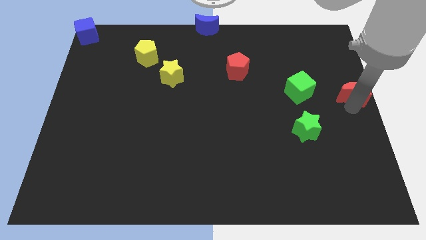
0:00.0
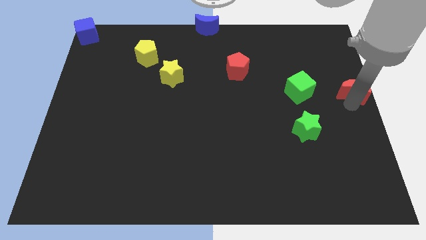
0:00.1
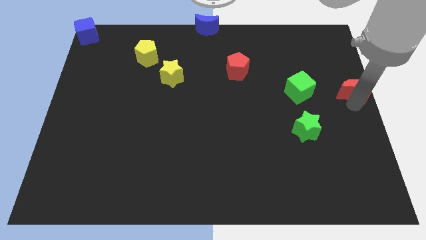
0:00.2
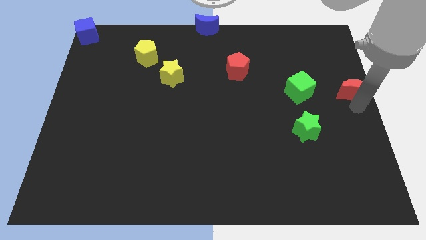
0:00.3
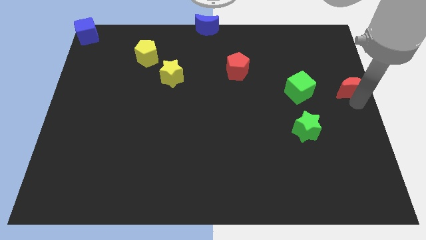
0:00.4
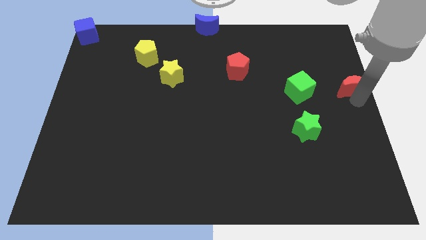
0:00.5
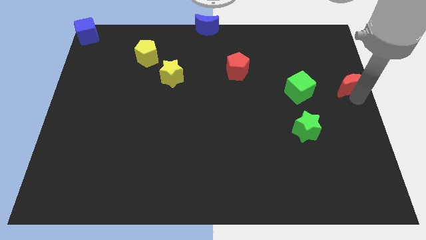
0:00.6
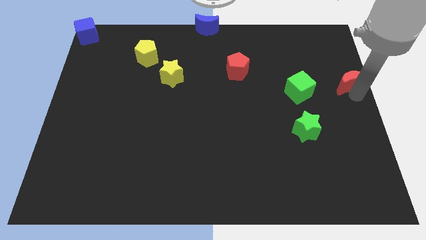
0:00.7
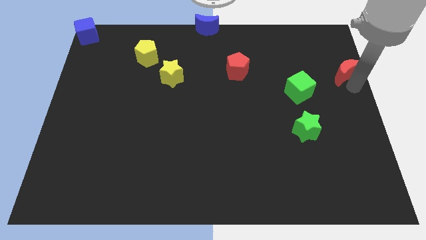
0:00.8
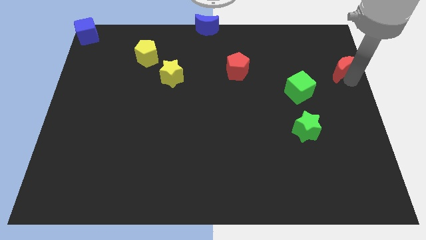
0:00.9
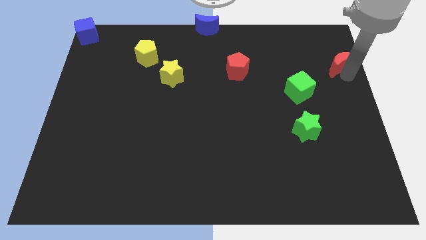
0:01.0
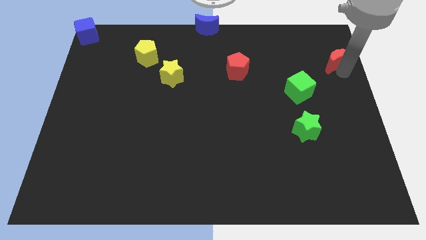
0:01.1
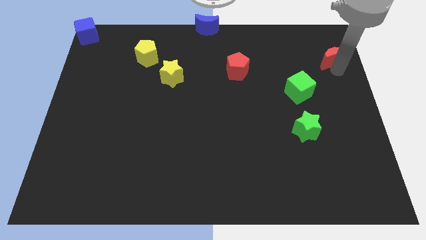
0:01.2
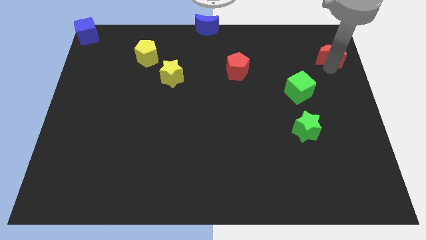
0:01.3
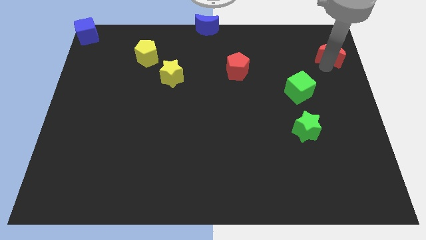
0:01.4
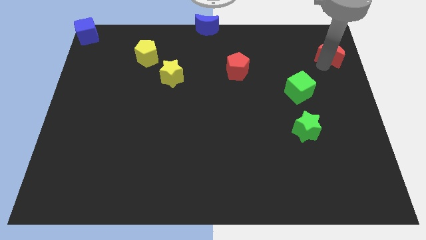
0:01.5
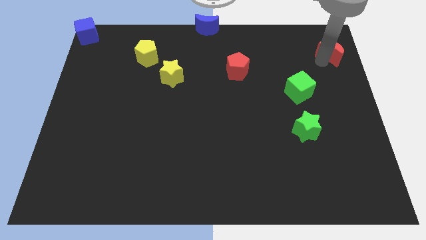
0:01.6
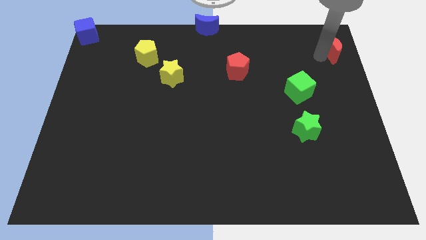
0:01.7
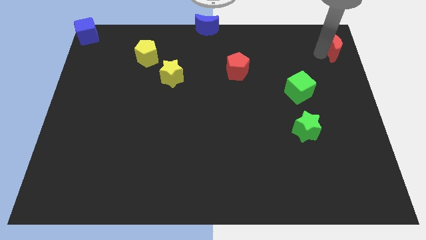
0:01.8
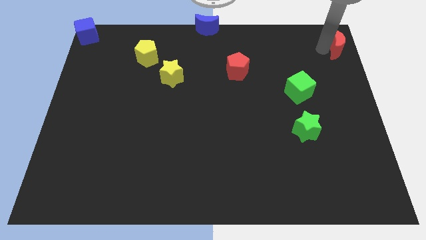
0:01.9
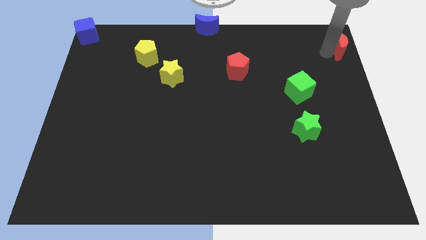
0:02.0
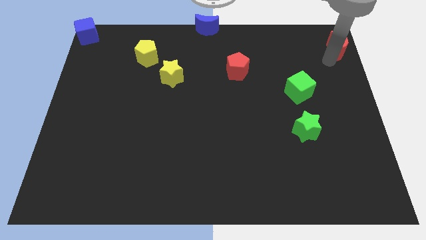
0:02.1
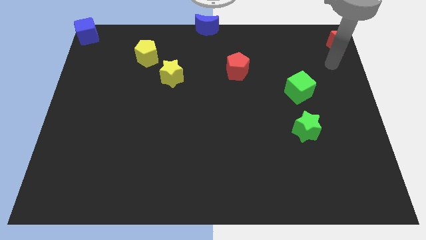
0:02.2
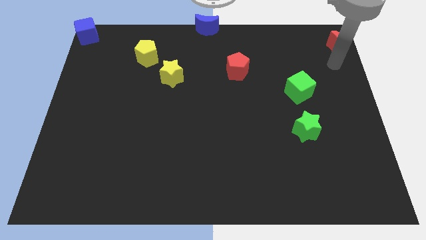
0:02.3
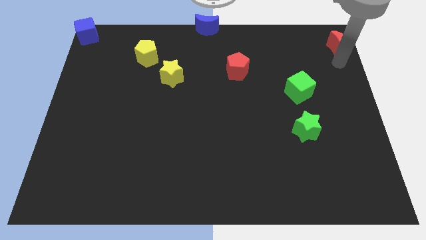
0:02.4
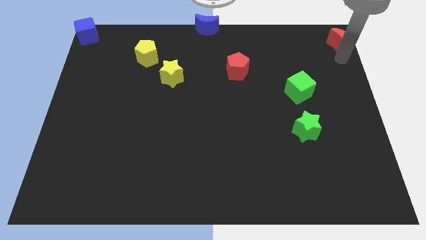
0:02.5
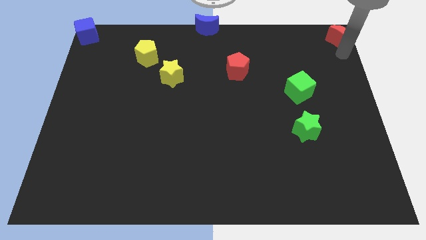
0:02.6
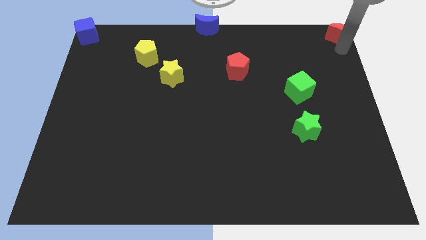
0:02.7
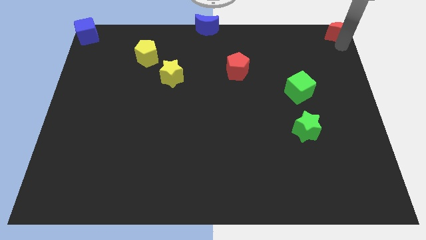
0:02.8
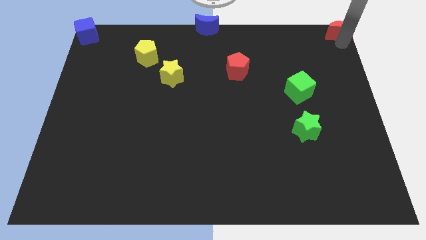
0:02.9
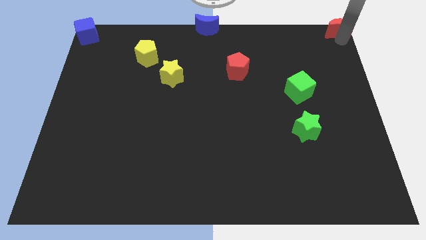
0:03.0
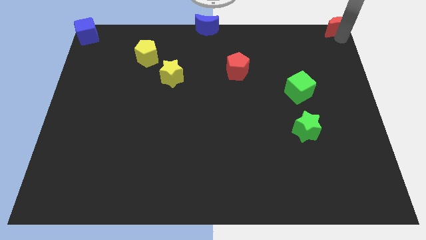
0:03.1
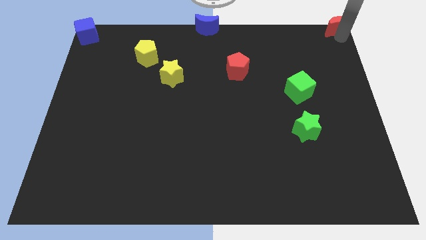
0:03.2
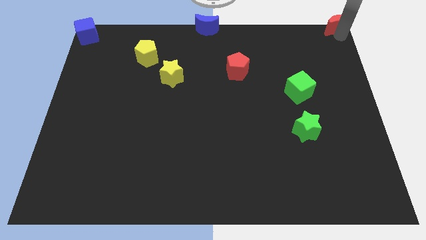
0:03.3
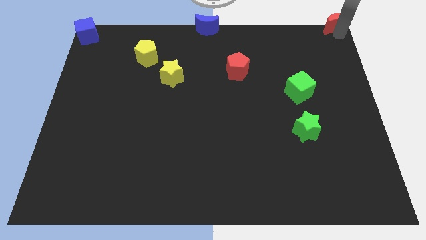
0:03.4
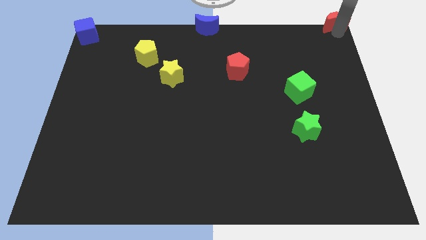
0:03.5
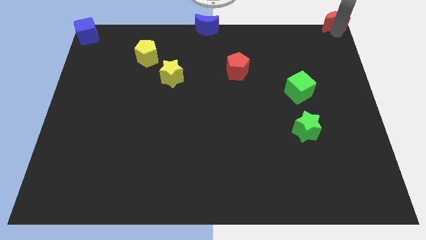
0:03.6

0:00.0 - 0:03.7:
push the red crescent towards the top right corner of the board

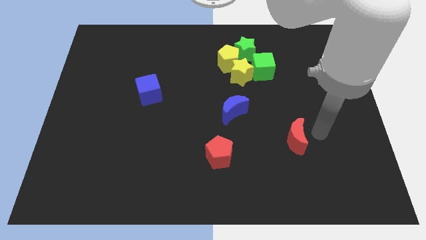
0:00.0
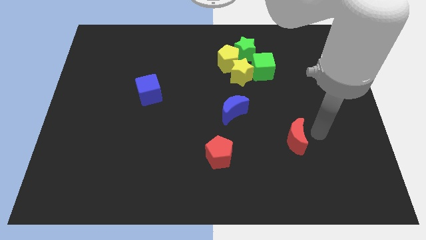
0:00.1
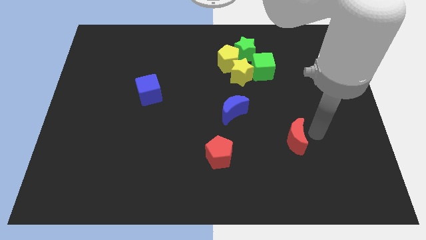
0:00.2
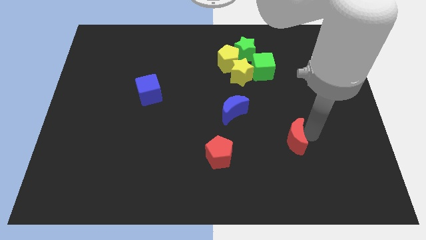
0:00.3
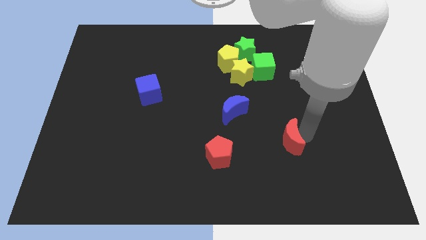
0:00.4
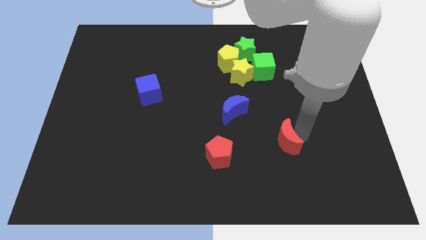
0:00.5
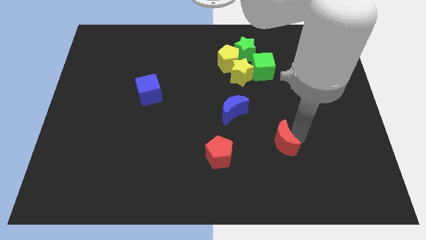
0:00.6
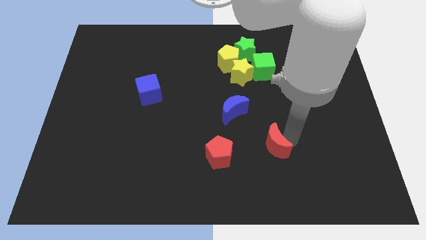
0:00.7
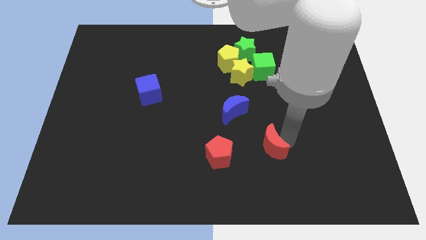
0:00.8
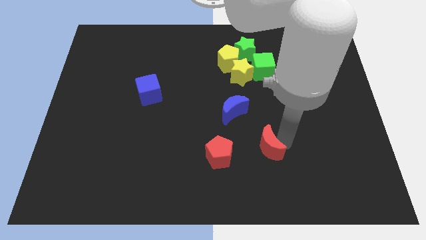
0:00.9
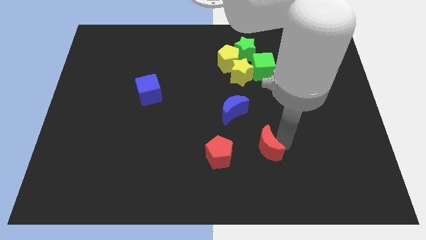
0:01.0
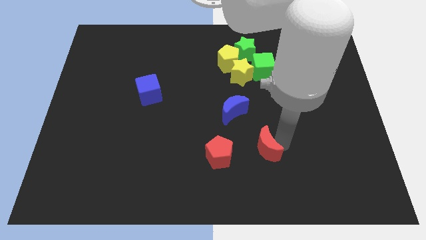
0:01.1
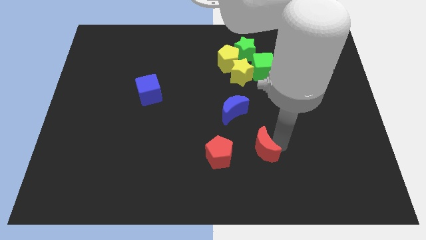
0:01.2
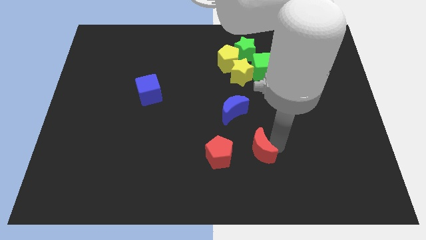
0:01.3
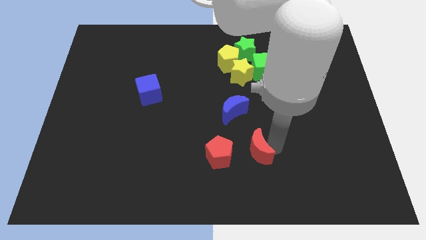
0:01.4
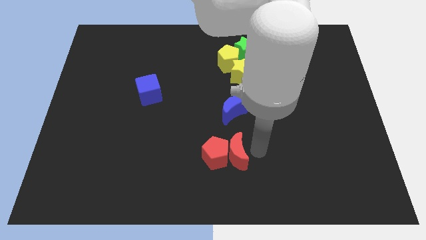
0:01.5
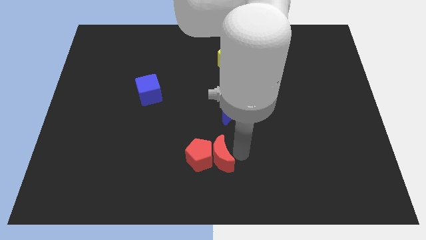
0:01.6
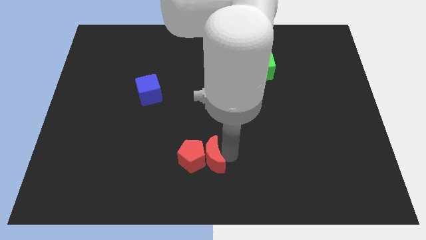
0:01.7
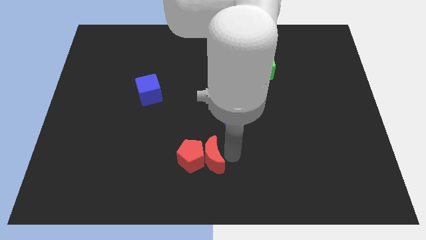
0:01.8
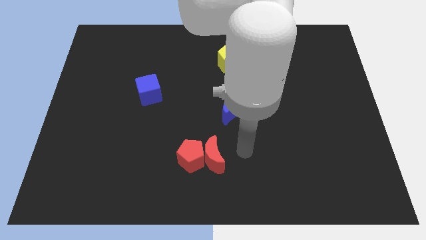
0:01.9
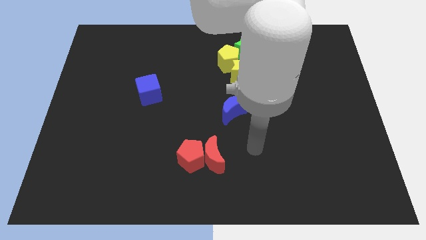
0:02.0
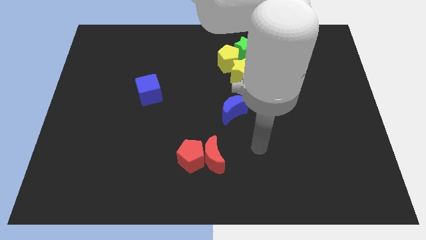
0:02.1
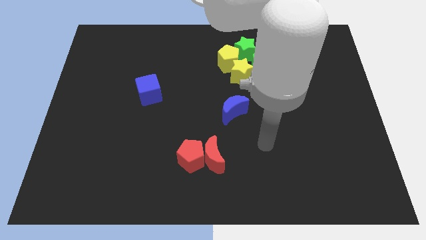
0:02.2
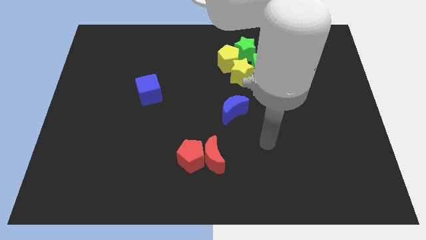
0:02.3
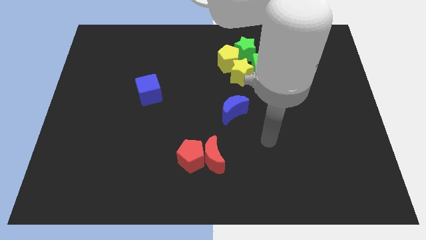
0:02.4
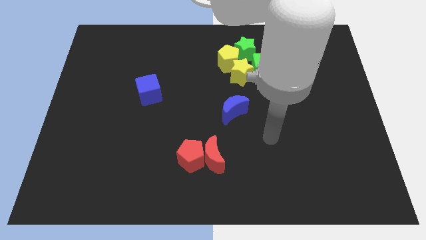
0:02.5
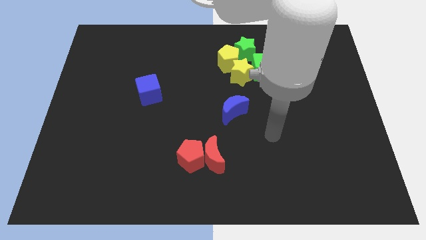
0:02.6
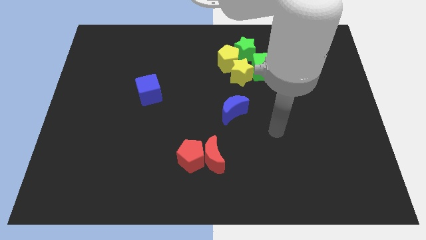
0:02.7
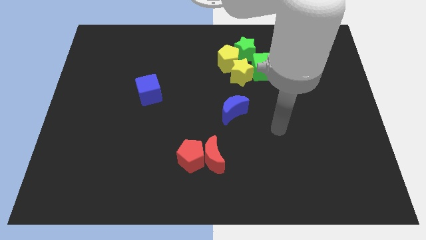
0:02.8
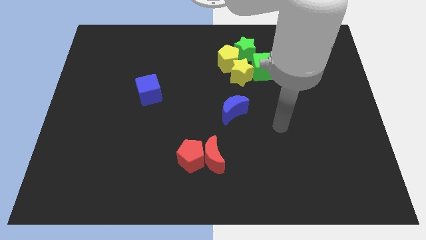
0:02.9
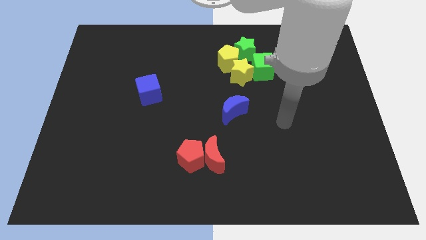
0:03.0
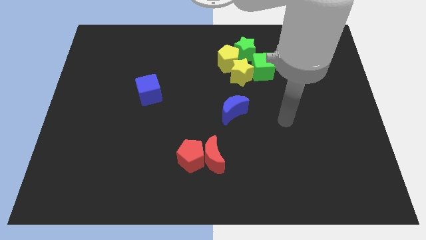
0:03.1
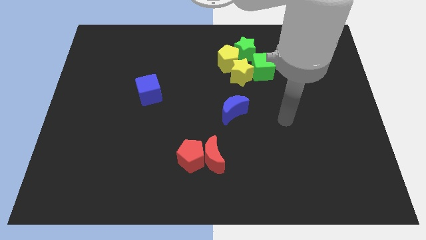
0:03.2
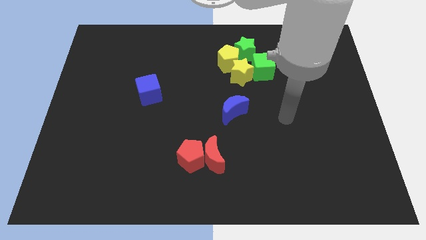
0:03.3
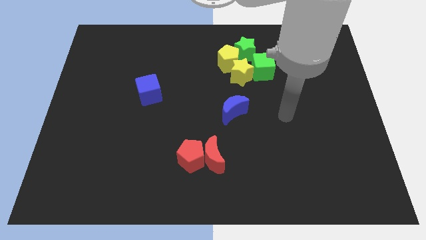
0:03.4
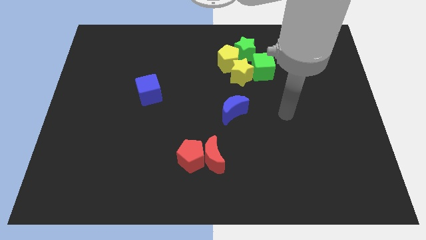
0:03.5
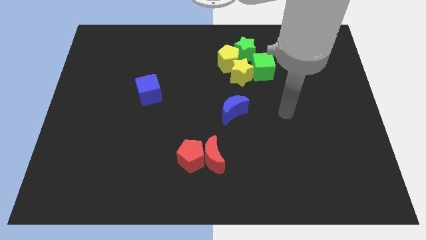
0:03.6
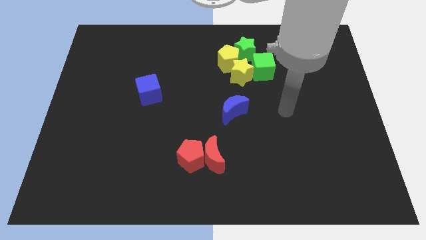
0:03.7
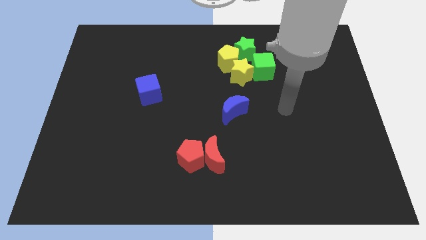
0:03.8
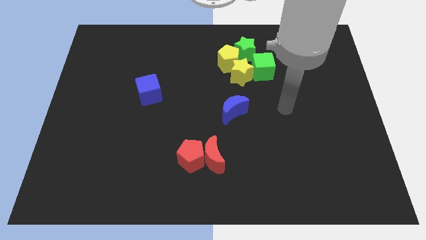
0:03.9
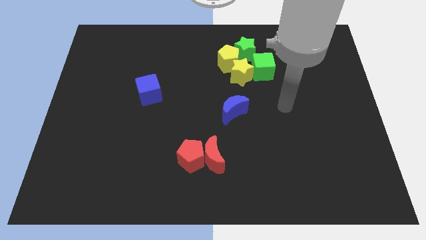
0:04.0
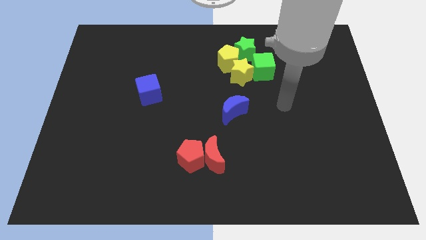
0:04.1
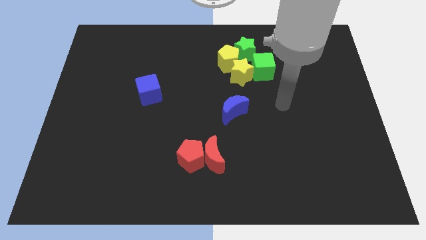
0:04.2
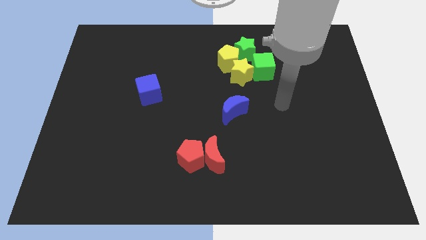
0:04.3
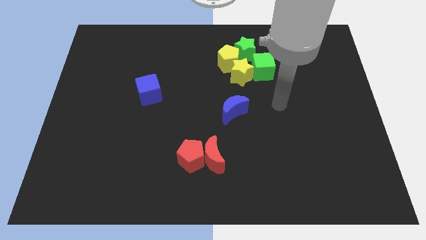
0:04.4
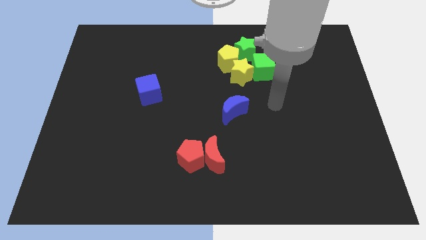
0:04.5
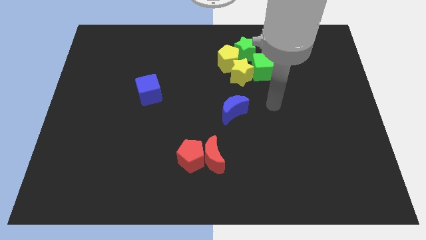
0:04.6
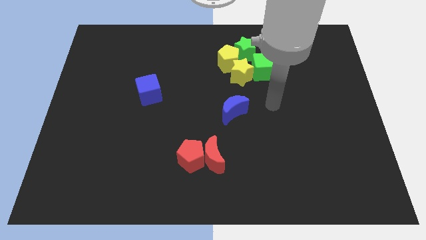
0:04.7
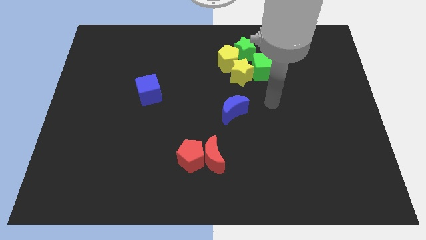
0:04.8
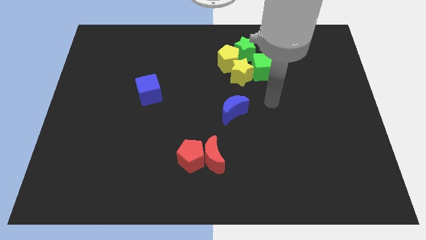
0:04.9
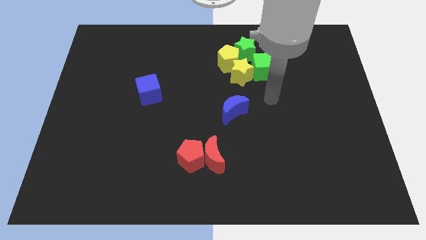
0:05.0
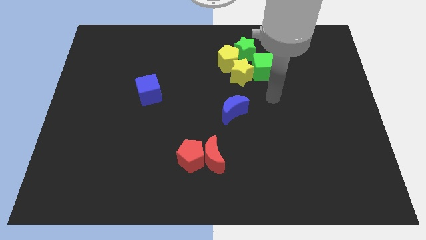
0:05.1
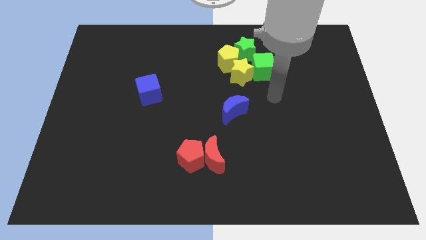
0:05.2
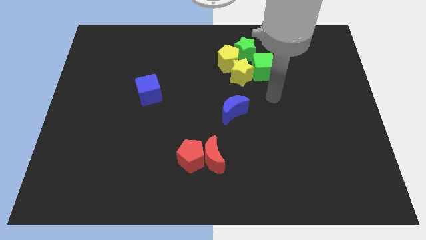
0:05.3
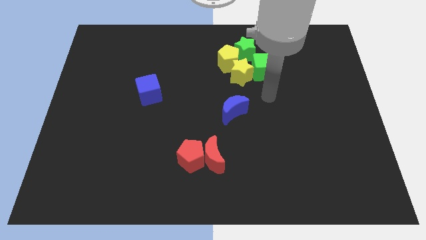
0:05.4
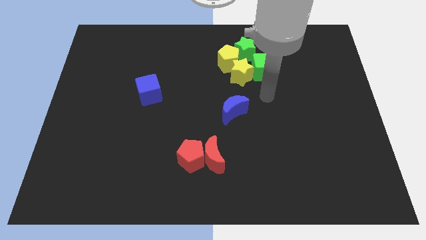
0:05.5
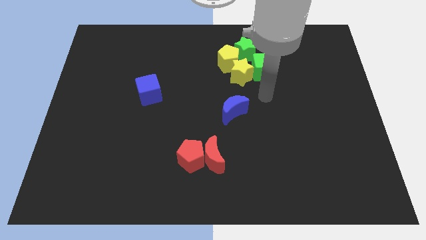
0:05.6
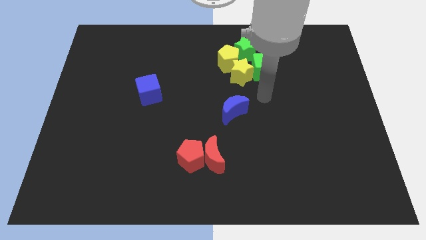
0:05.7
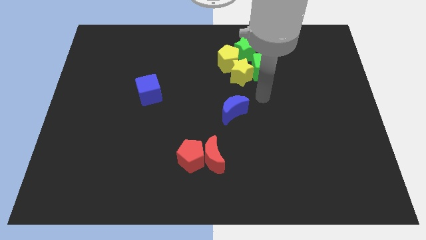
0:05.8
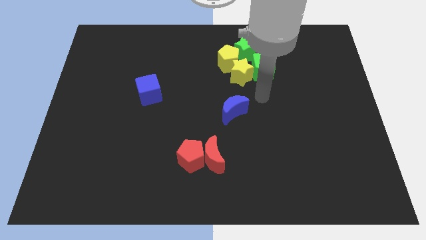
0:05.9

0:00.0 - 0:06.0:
push the red crescent into the red pentagon
